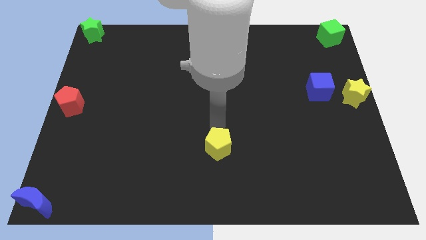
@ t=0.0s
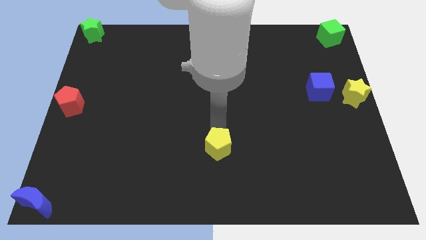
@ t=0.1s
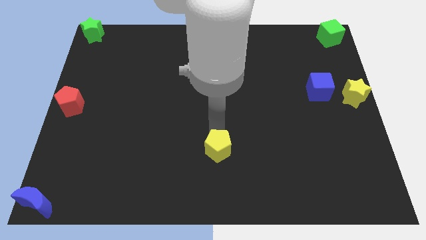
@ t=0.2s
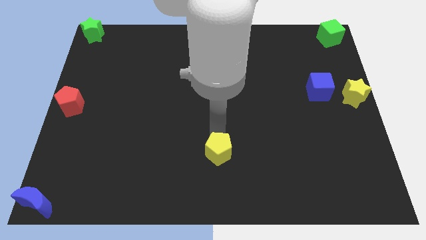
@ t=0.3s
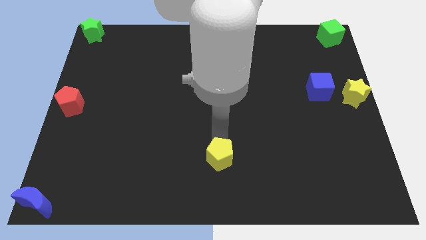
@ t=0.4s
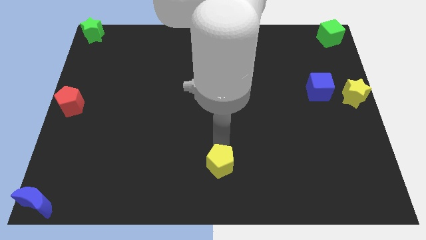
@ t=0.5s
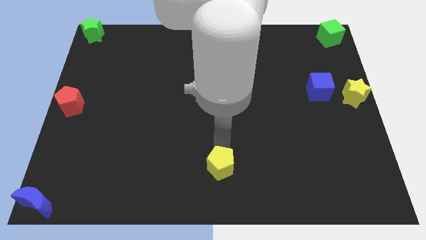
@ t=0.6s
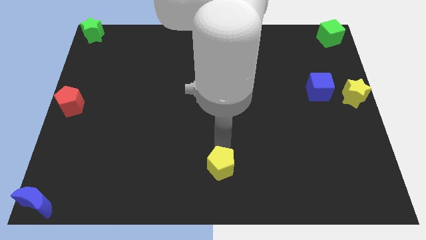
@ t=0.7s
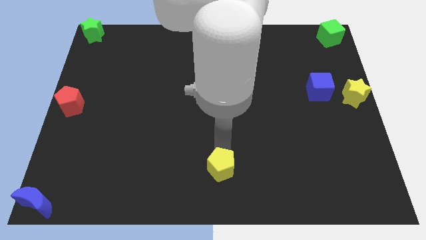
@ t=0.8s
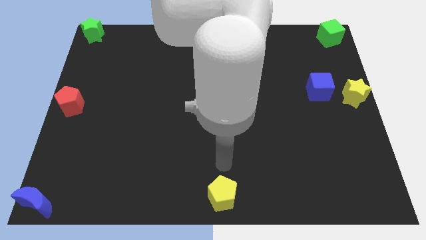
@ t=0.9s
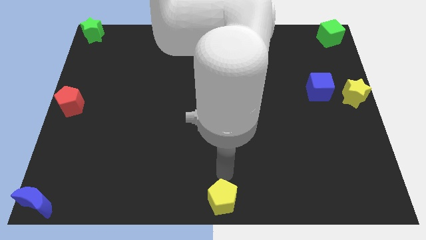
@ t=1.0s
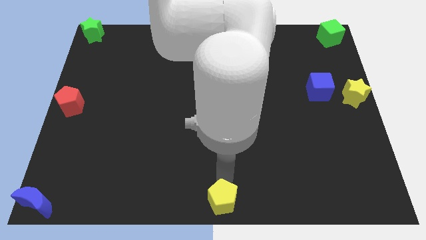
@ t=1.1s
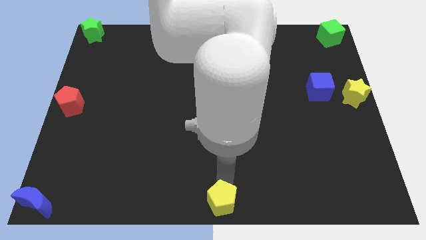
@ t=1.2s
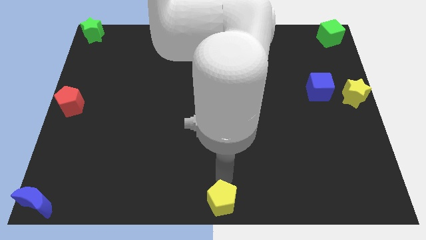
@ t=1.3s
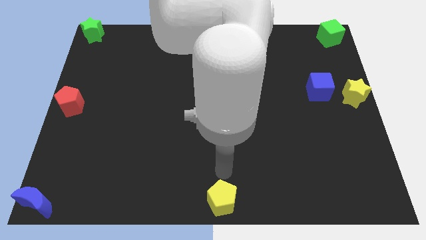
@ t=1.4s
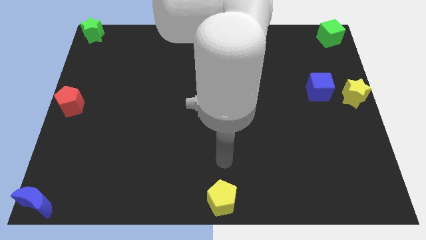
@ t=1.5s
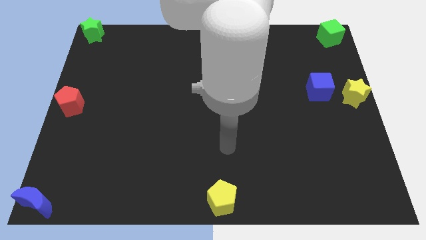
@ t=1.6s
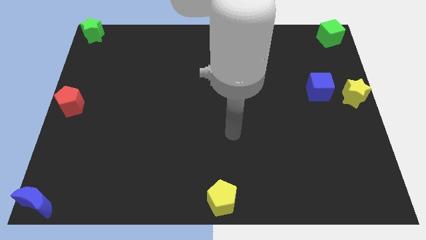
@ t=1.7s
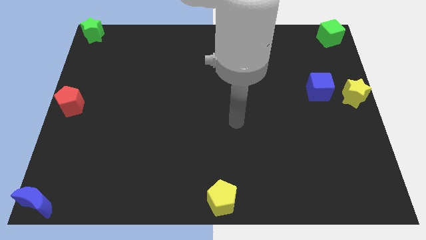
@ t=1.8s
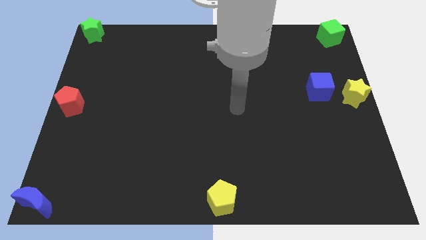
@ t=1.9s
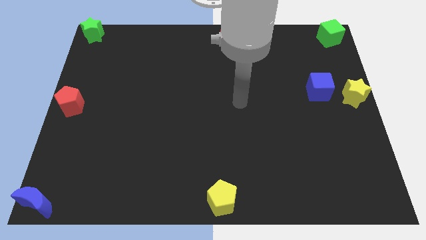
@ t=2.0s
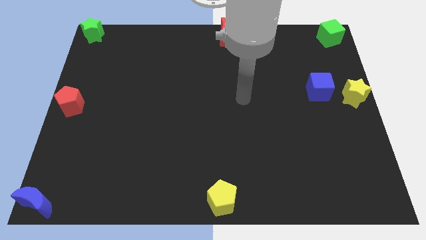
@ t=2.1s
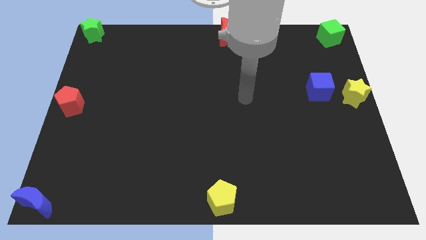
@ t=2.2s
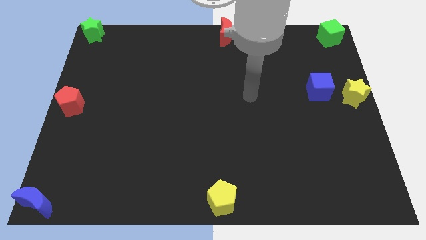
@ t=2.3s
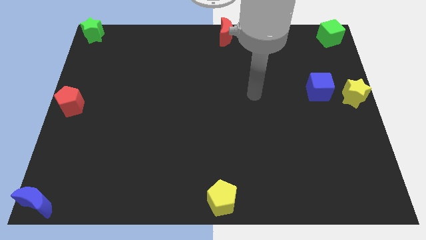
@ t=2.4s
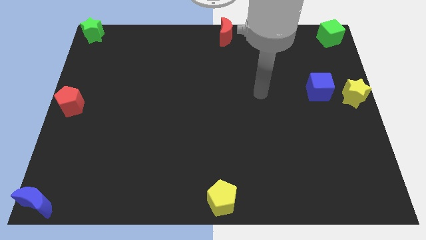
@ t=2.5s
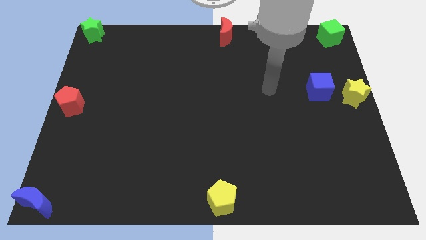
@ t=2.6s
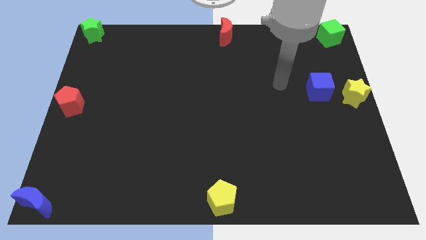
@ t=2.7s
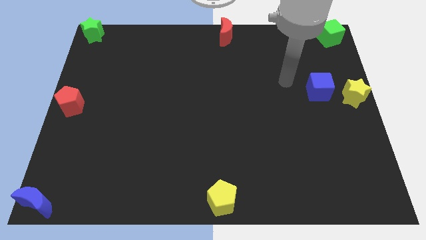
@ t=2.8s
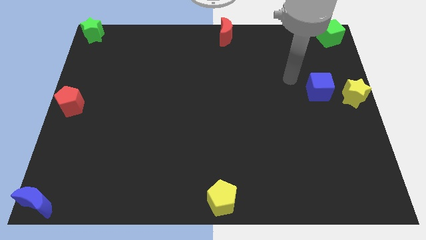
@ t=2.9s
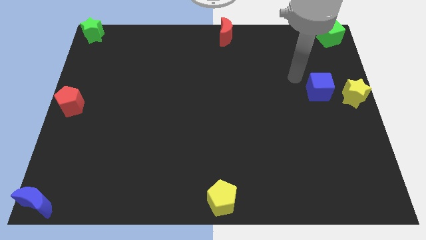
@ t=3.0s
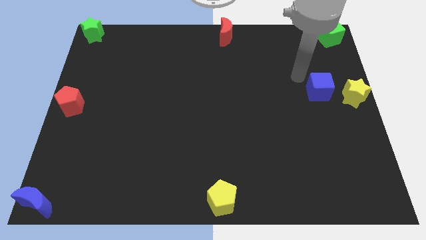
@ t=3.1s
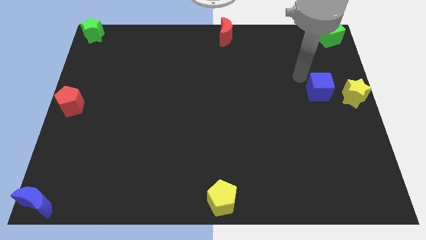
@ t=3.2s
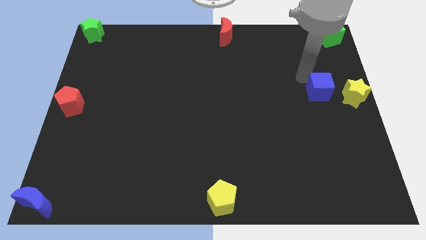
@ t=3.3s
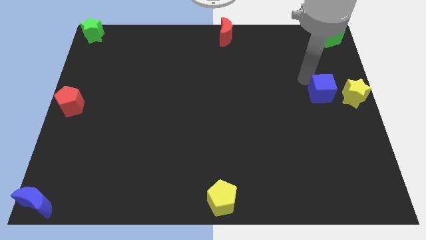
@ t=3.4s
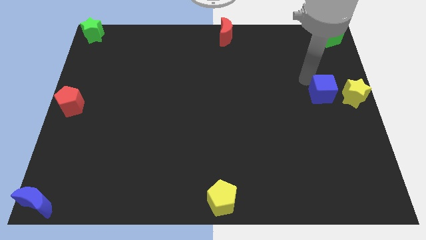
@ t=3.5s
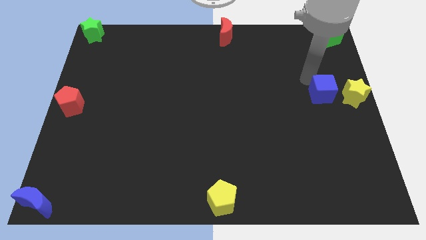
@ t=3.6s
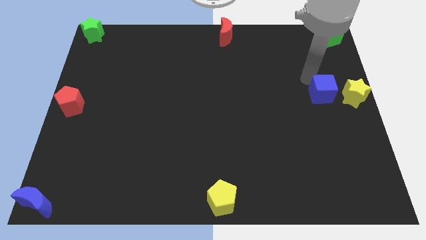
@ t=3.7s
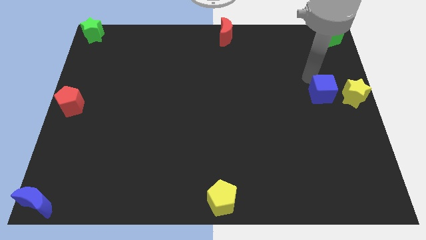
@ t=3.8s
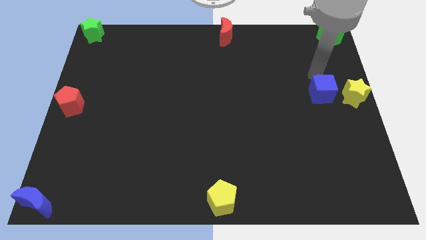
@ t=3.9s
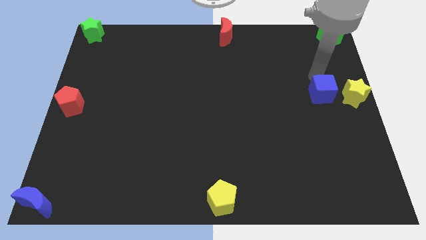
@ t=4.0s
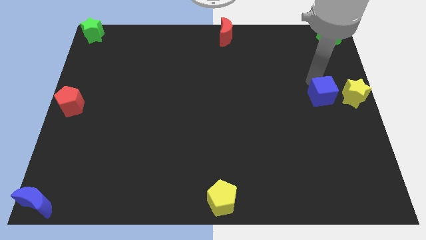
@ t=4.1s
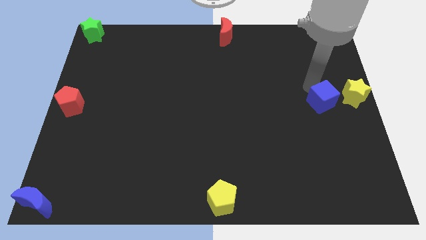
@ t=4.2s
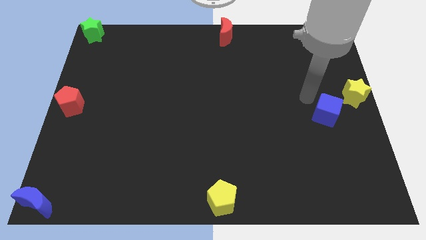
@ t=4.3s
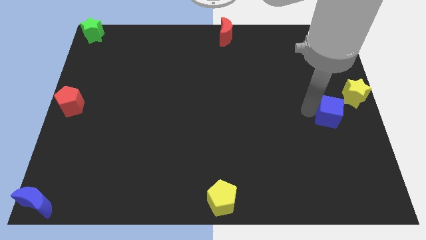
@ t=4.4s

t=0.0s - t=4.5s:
move yellow pentagon to the bottom center of the board

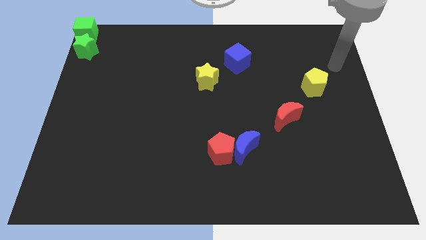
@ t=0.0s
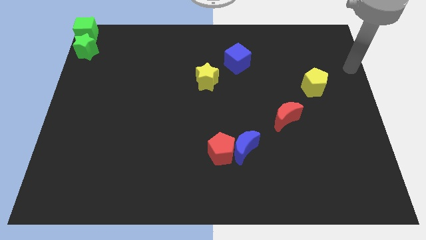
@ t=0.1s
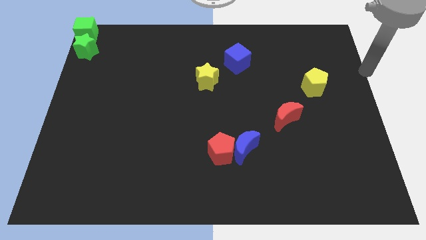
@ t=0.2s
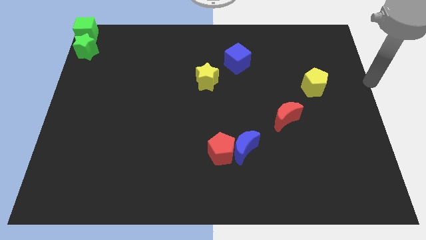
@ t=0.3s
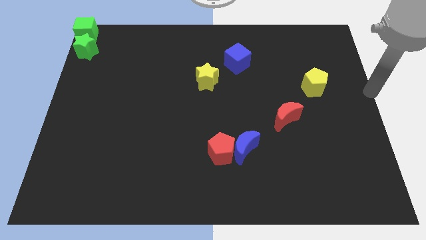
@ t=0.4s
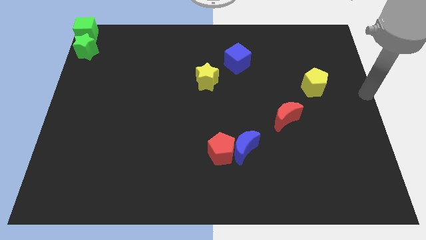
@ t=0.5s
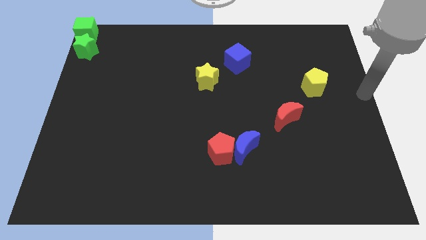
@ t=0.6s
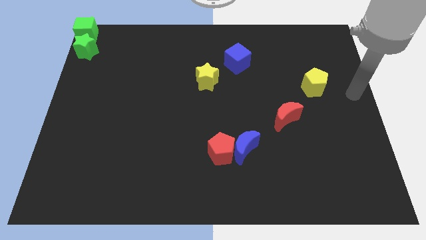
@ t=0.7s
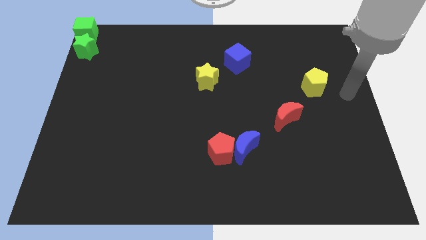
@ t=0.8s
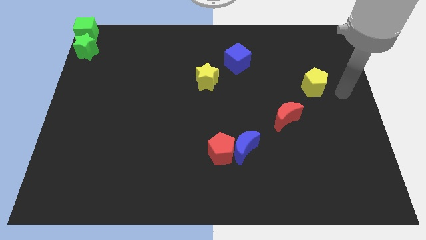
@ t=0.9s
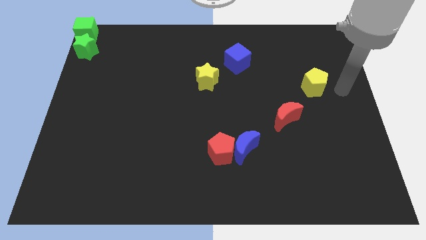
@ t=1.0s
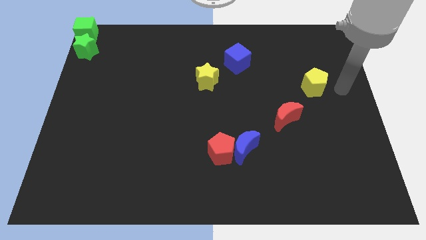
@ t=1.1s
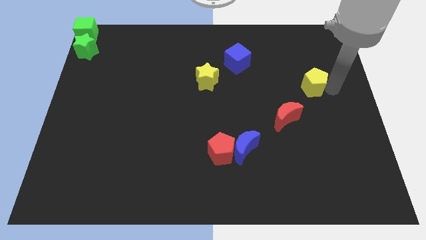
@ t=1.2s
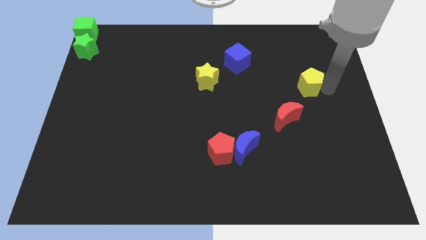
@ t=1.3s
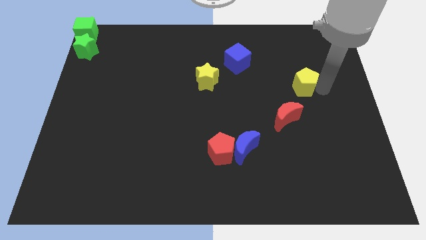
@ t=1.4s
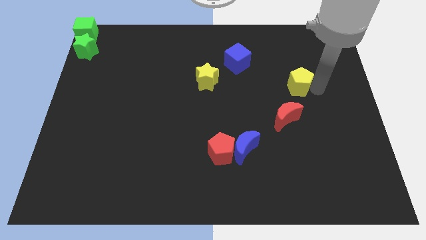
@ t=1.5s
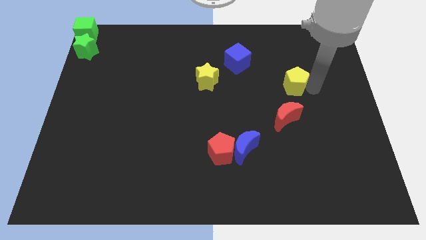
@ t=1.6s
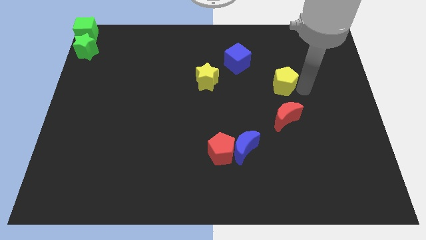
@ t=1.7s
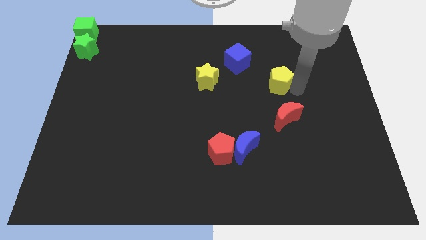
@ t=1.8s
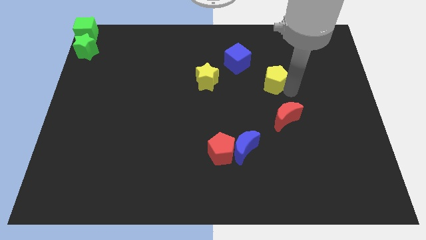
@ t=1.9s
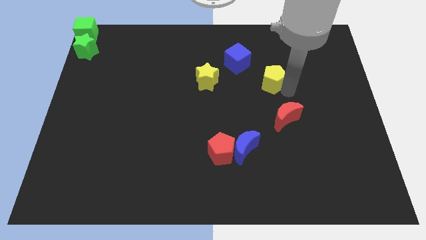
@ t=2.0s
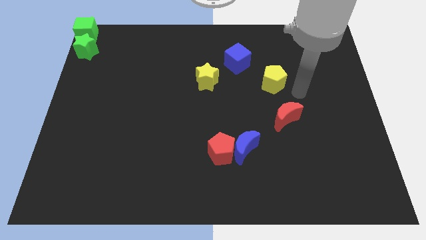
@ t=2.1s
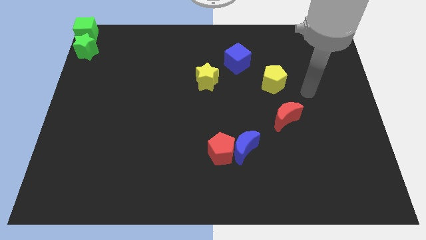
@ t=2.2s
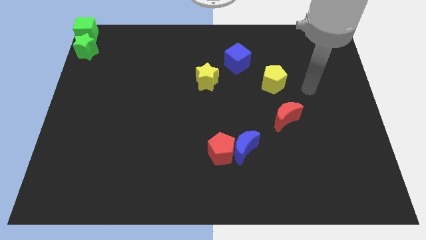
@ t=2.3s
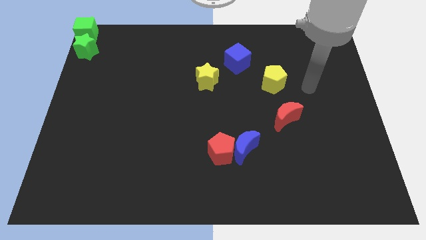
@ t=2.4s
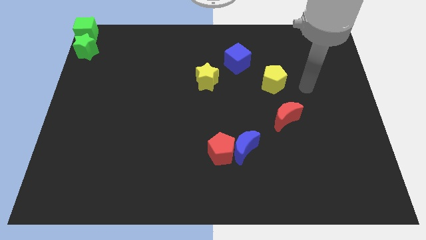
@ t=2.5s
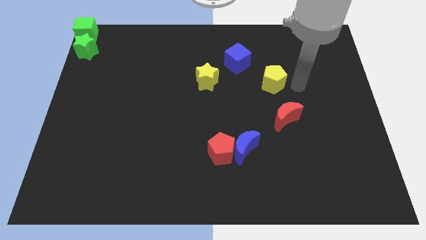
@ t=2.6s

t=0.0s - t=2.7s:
move the yellow pentagon parallel to the yellow star

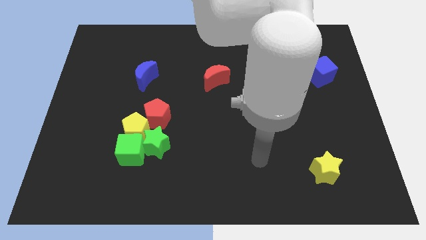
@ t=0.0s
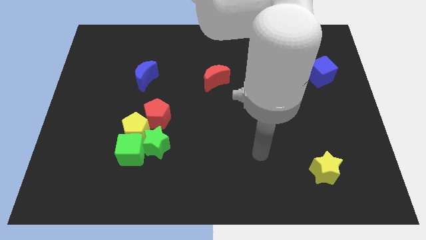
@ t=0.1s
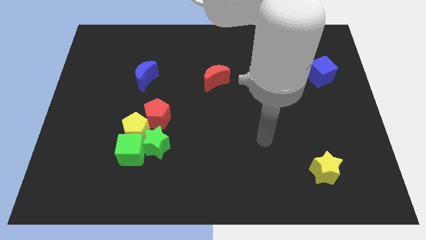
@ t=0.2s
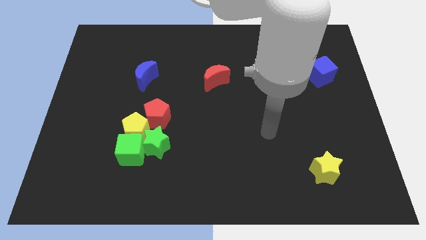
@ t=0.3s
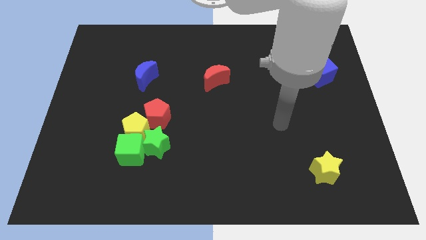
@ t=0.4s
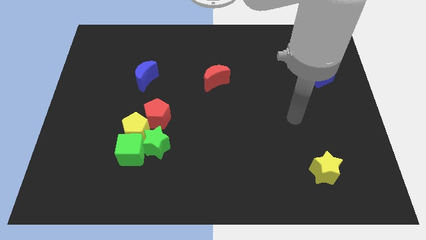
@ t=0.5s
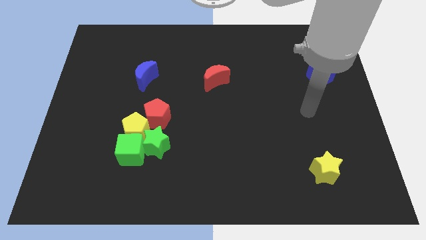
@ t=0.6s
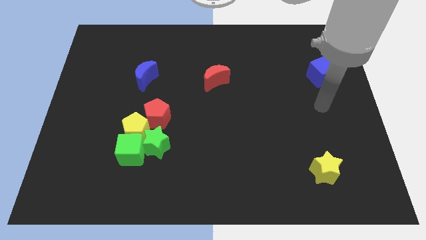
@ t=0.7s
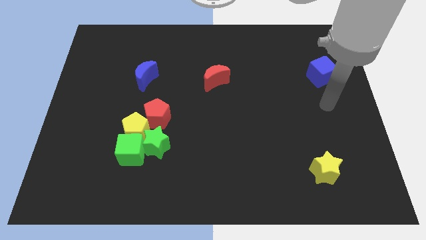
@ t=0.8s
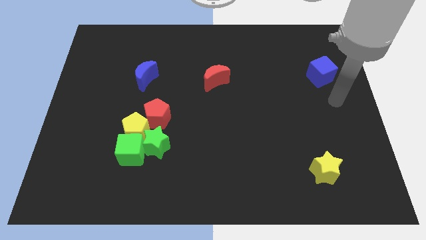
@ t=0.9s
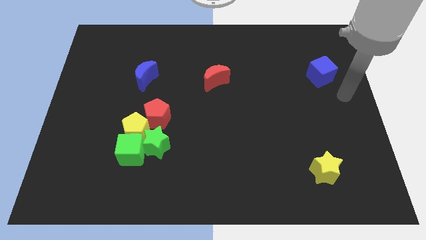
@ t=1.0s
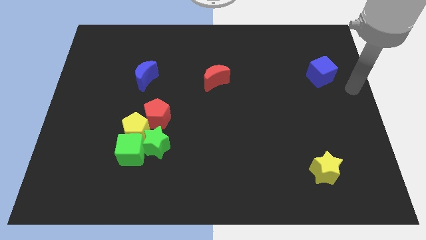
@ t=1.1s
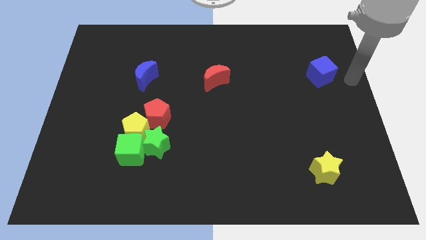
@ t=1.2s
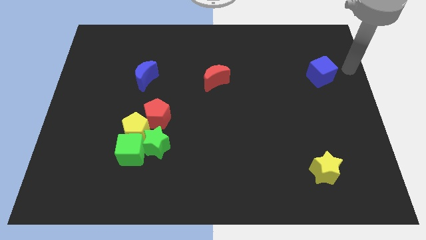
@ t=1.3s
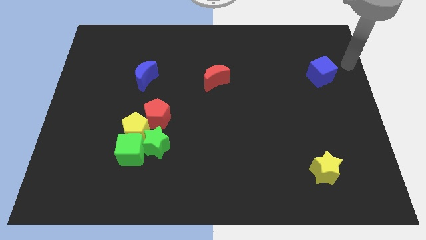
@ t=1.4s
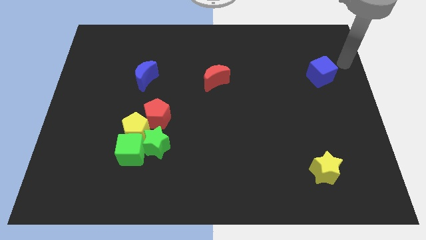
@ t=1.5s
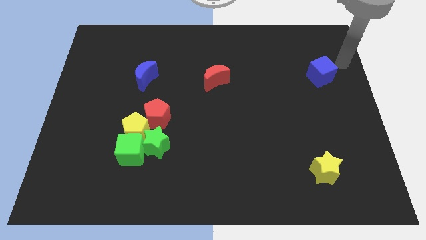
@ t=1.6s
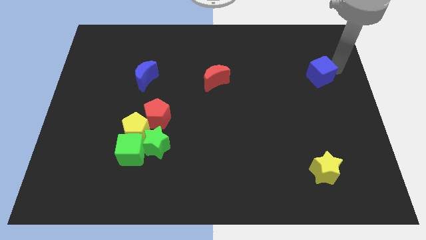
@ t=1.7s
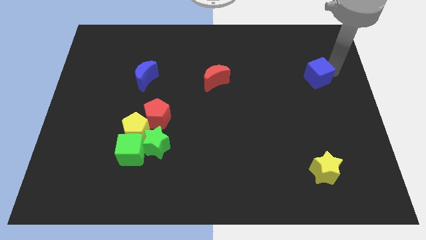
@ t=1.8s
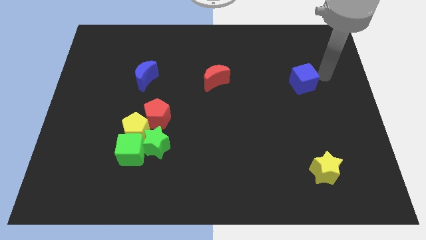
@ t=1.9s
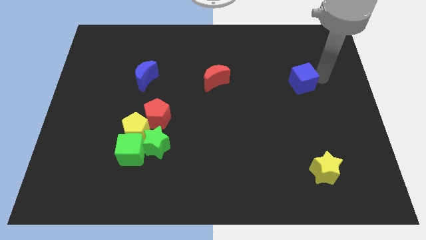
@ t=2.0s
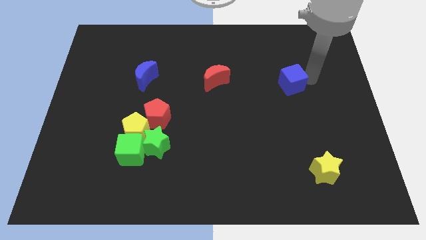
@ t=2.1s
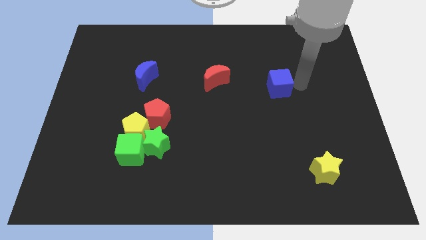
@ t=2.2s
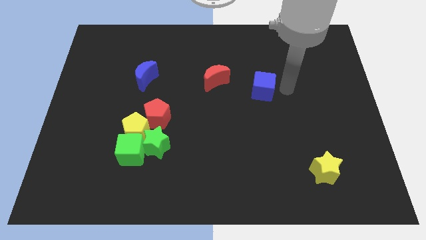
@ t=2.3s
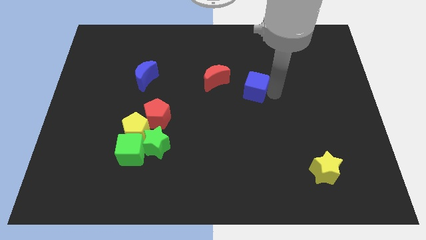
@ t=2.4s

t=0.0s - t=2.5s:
push the blue cube towards the red moon
